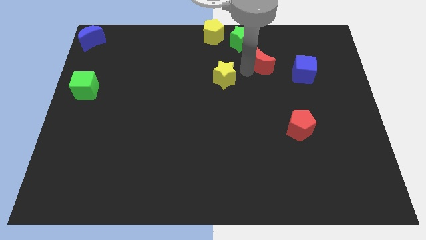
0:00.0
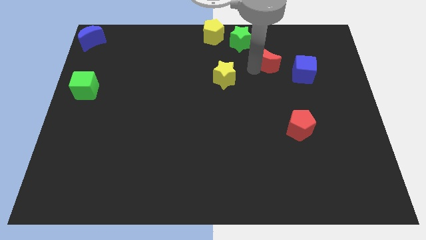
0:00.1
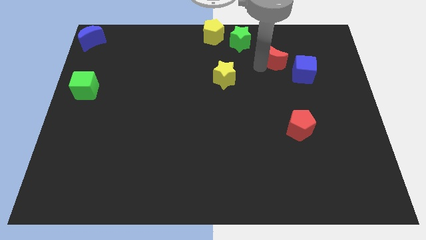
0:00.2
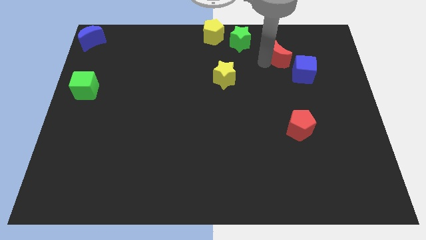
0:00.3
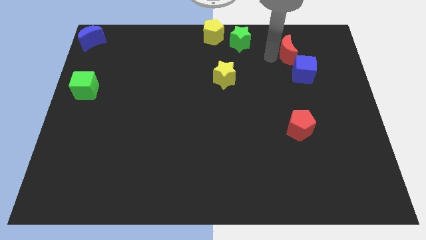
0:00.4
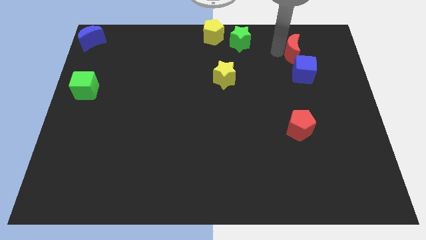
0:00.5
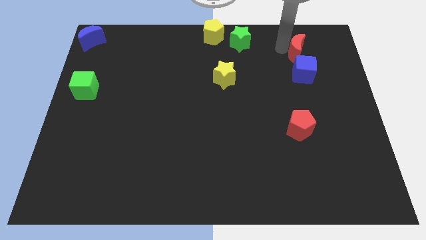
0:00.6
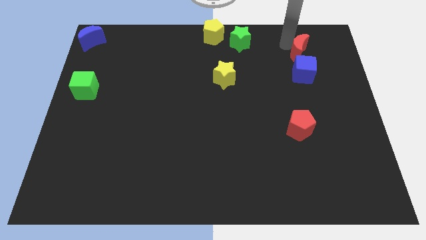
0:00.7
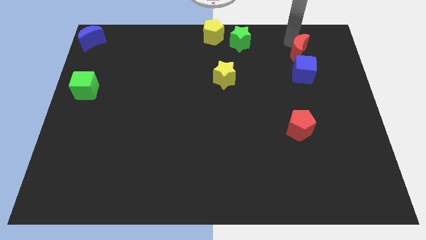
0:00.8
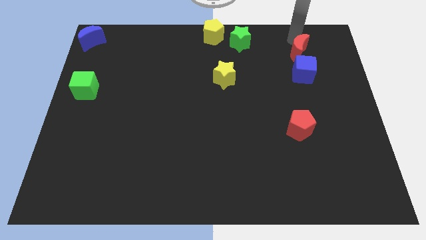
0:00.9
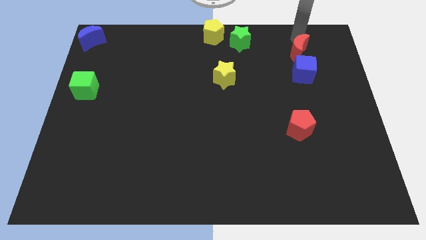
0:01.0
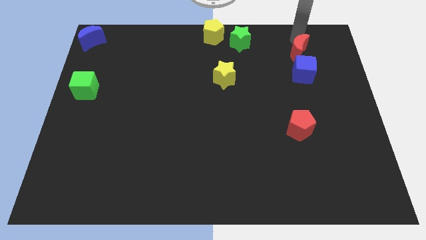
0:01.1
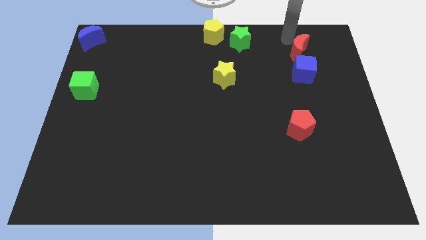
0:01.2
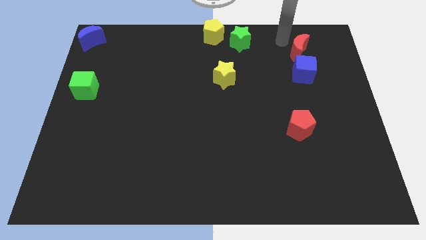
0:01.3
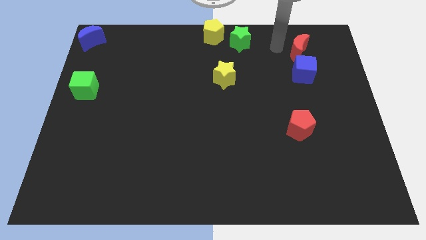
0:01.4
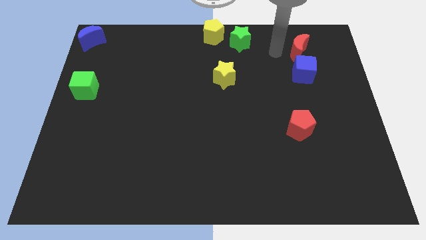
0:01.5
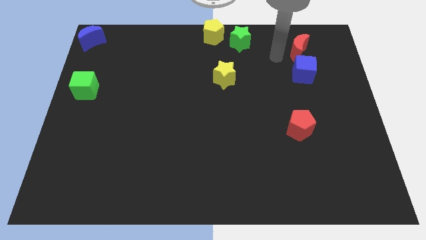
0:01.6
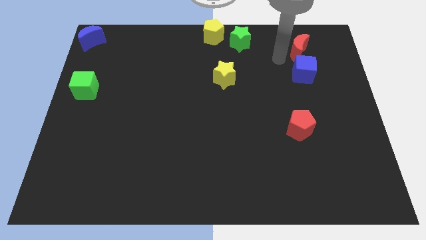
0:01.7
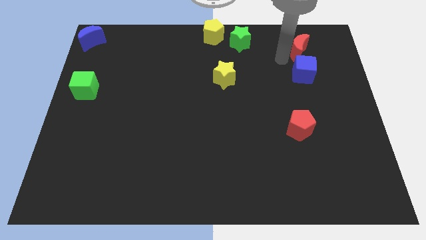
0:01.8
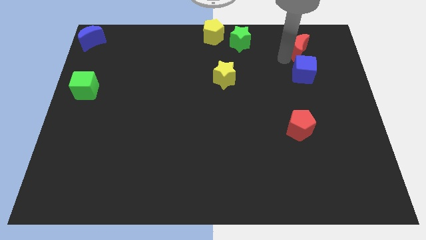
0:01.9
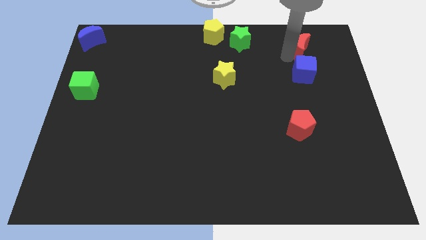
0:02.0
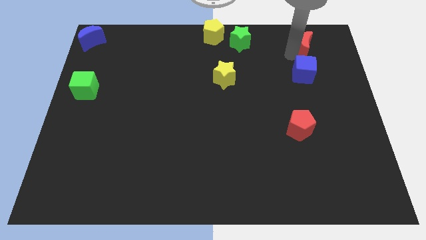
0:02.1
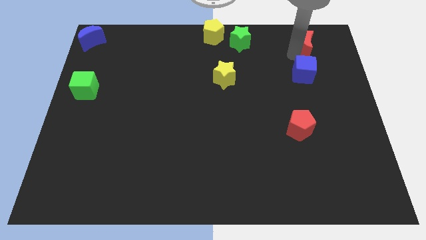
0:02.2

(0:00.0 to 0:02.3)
place the red moon vertically above the blue cube

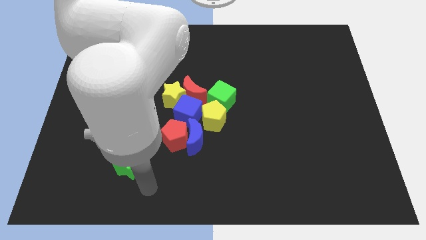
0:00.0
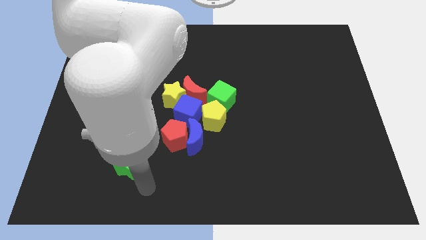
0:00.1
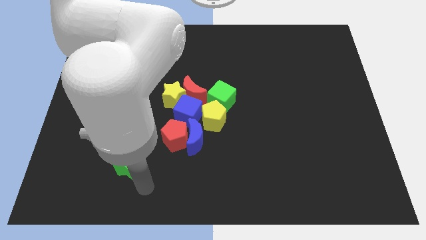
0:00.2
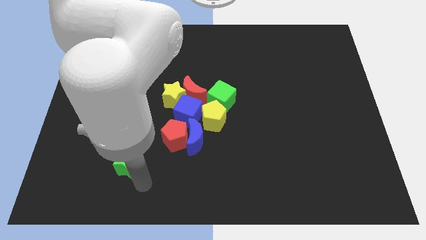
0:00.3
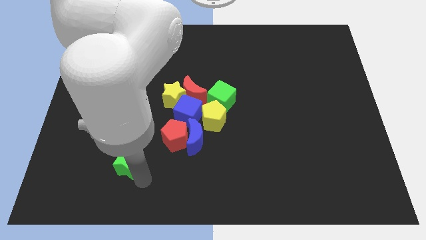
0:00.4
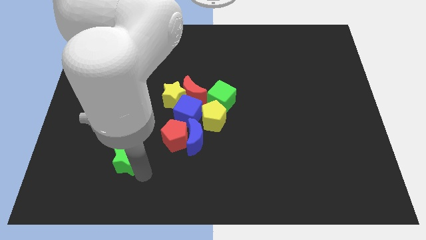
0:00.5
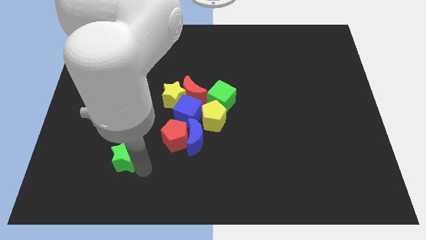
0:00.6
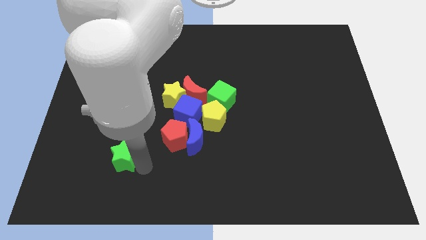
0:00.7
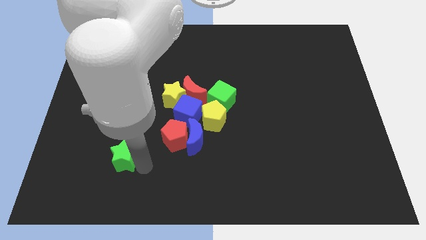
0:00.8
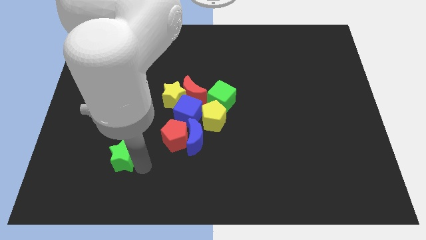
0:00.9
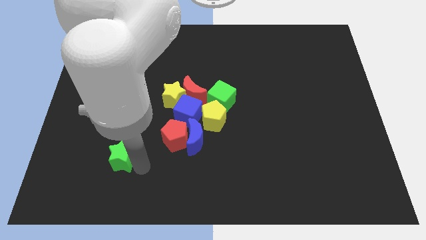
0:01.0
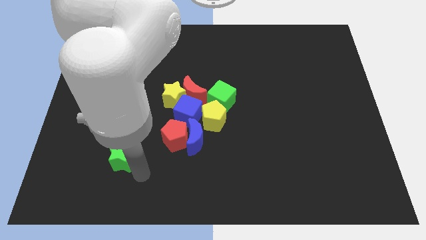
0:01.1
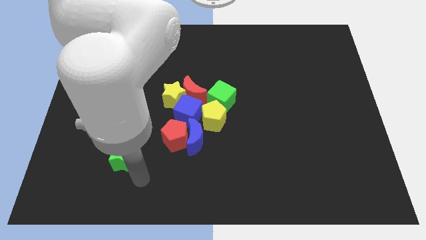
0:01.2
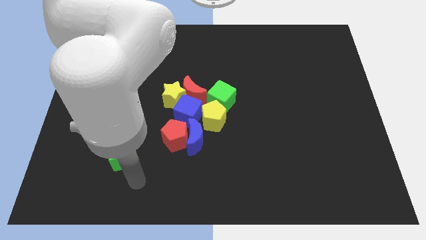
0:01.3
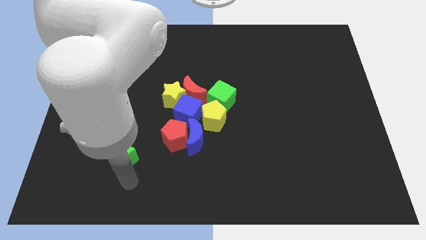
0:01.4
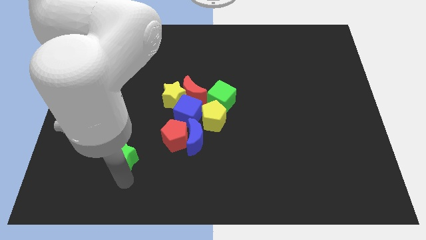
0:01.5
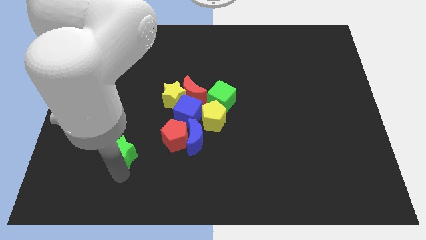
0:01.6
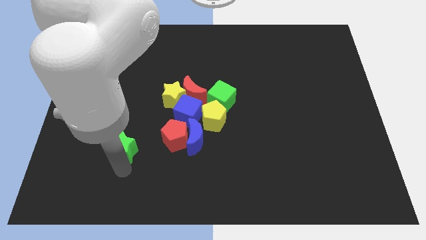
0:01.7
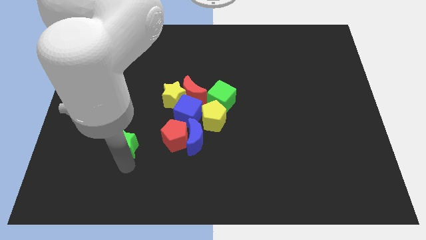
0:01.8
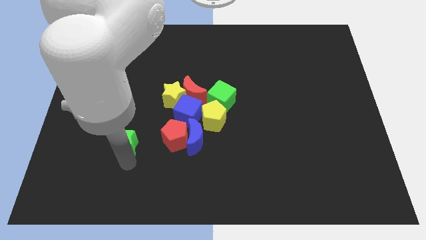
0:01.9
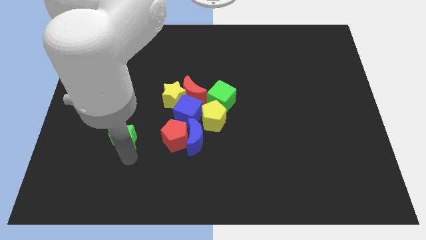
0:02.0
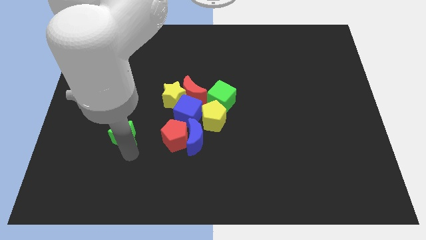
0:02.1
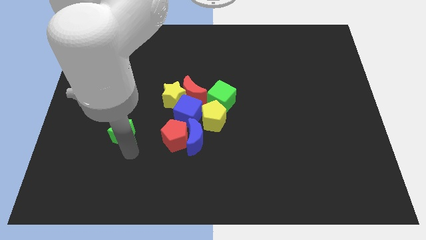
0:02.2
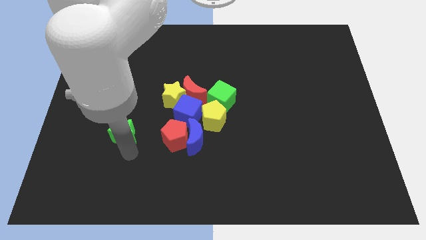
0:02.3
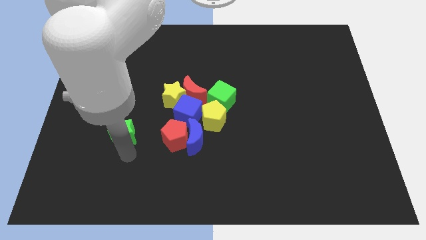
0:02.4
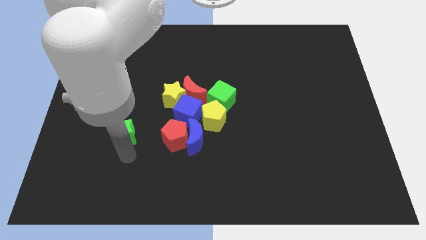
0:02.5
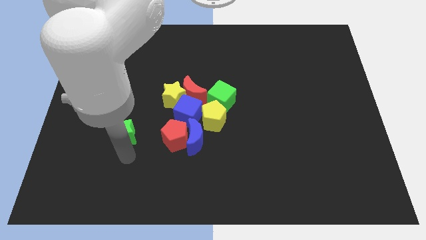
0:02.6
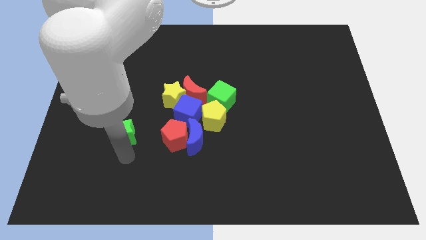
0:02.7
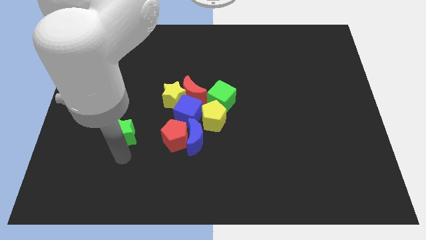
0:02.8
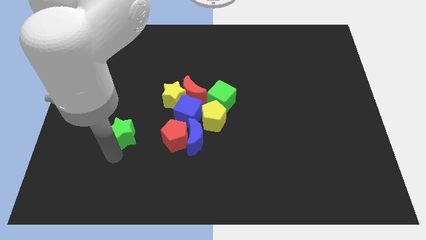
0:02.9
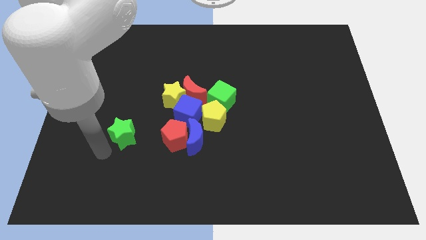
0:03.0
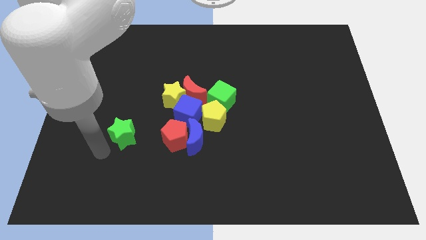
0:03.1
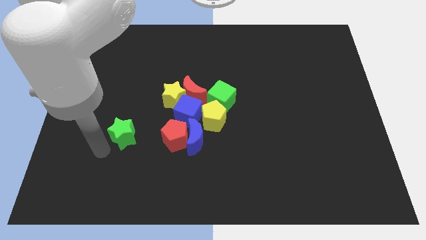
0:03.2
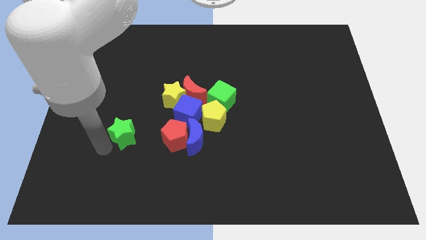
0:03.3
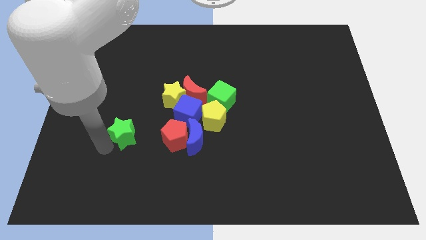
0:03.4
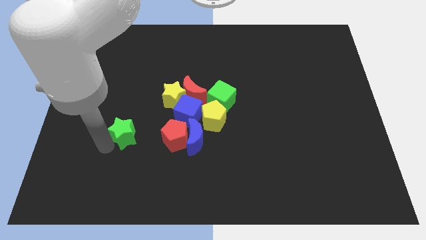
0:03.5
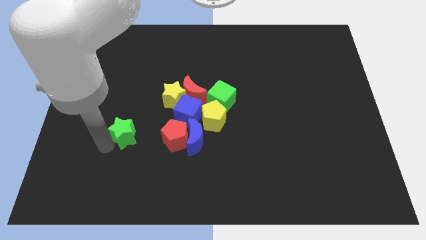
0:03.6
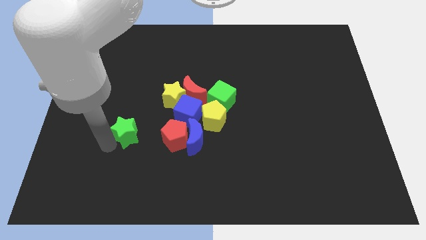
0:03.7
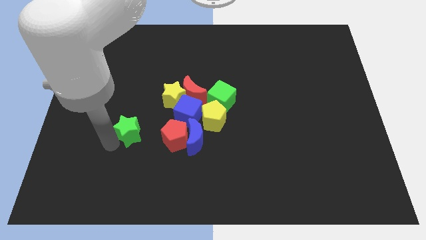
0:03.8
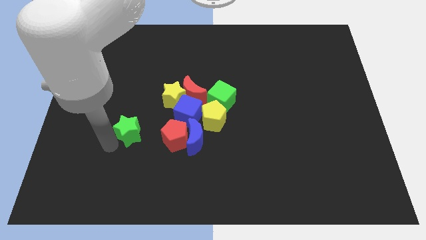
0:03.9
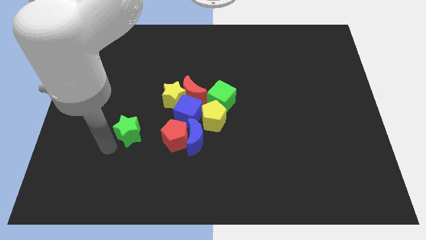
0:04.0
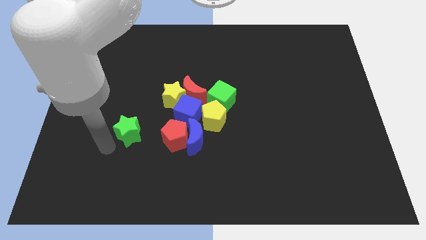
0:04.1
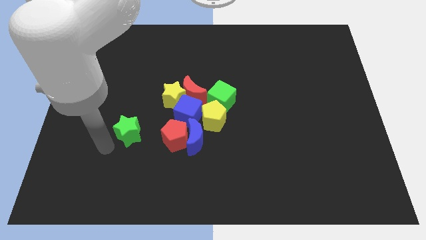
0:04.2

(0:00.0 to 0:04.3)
move green star to the left of red pentagon

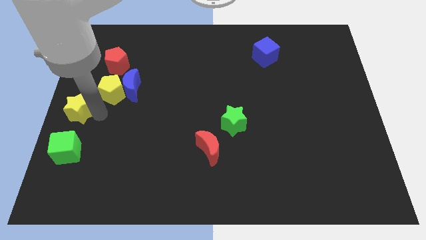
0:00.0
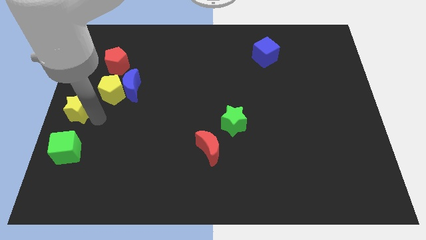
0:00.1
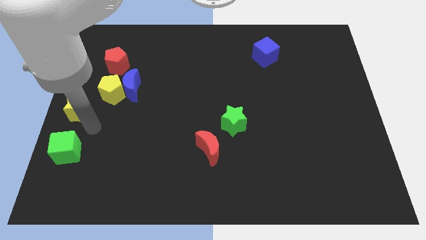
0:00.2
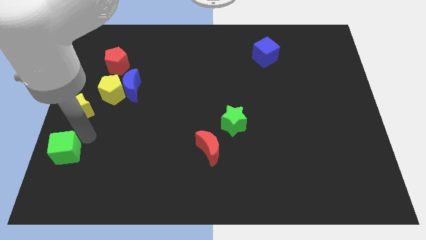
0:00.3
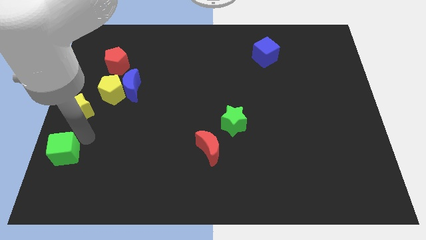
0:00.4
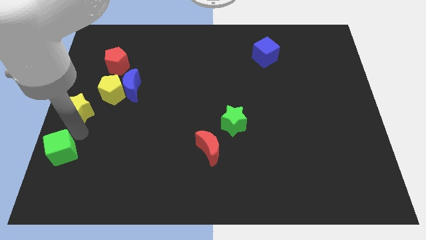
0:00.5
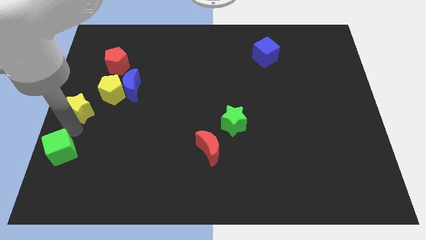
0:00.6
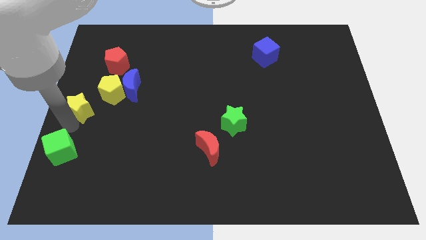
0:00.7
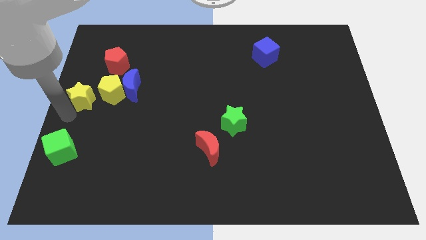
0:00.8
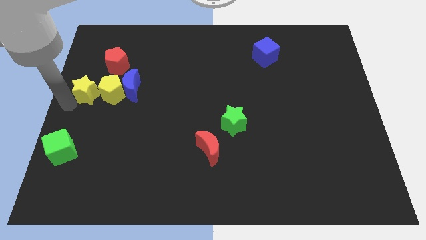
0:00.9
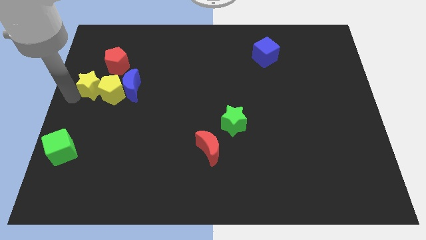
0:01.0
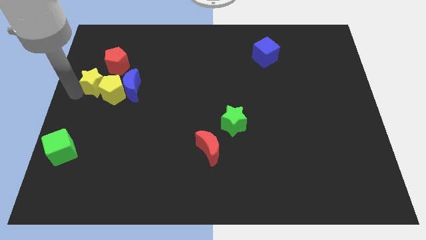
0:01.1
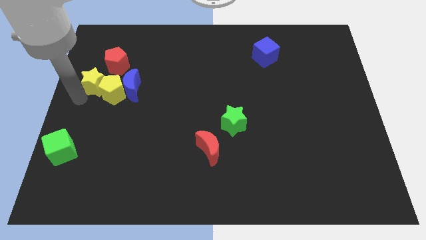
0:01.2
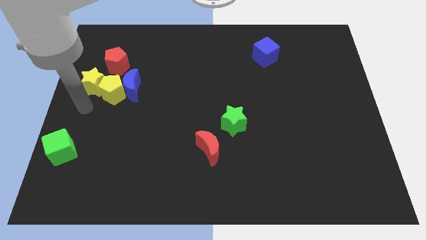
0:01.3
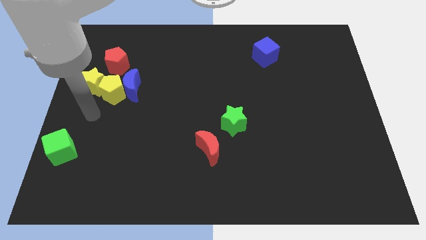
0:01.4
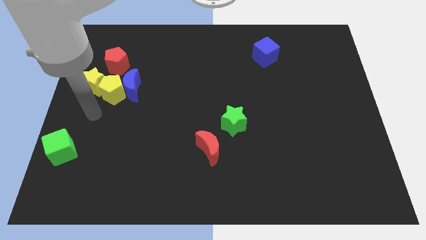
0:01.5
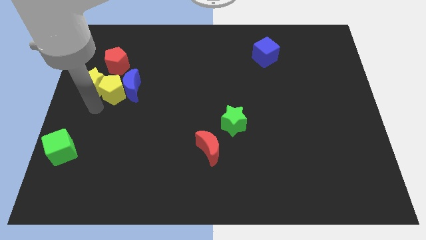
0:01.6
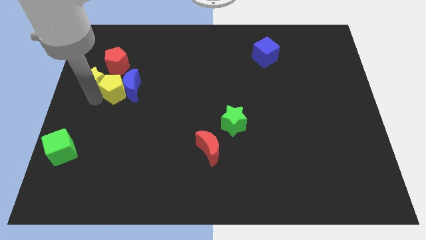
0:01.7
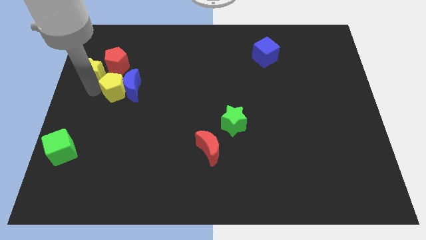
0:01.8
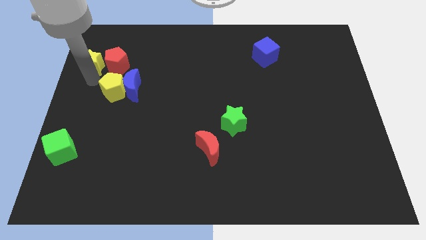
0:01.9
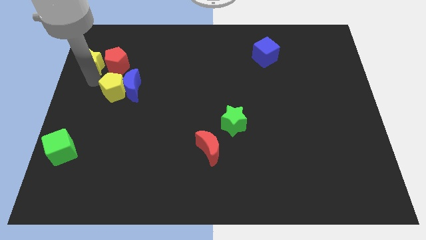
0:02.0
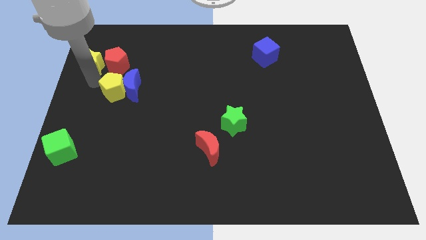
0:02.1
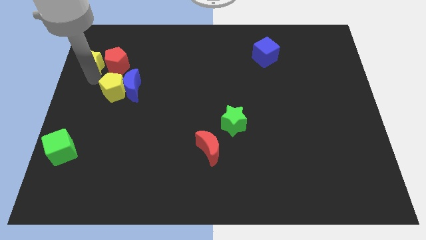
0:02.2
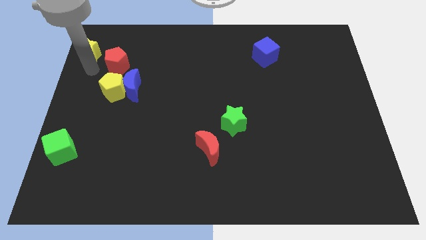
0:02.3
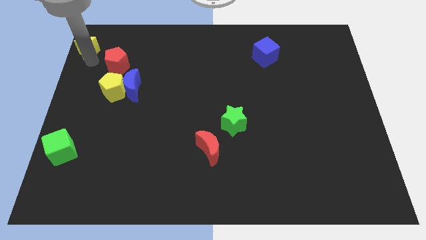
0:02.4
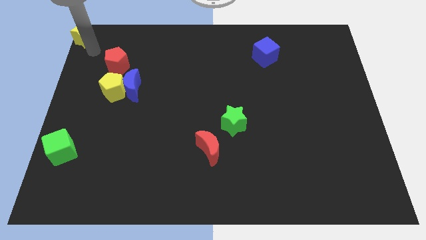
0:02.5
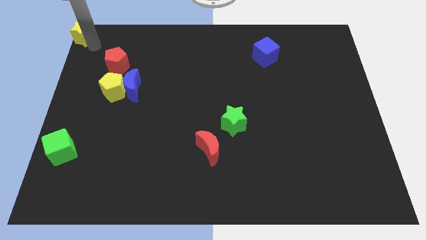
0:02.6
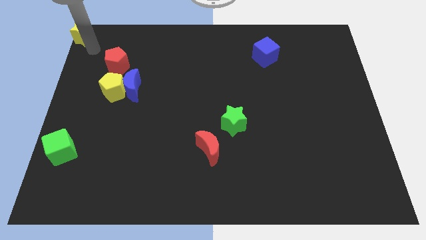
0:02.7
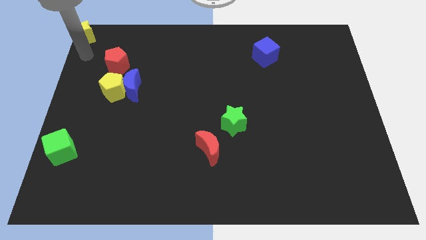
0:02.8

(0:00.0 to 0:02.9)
move the yellow star to the top left of the board
